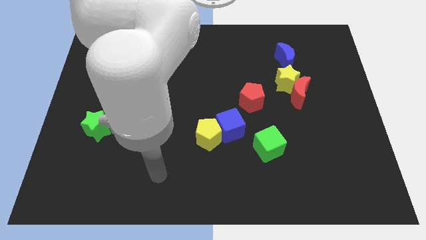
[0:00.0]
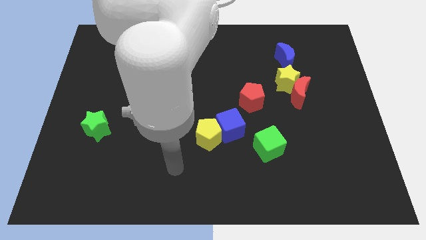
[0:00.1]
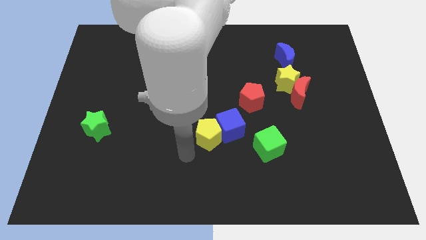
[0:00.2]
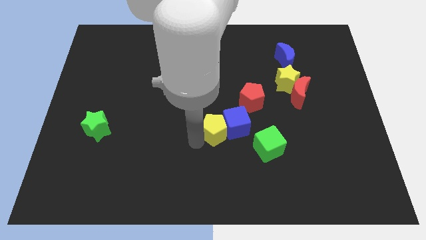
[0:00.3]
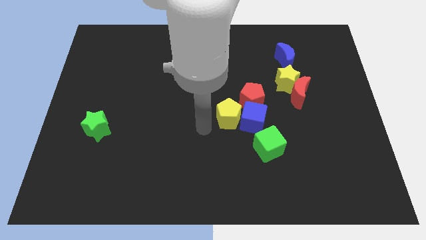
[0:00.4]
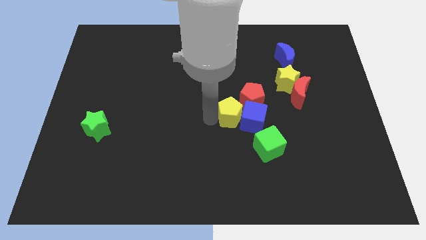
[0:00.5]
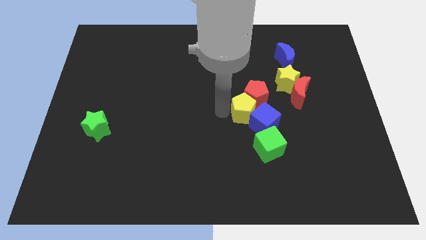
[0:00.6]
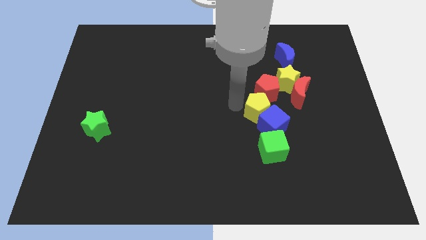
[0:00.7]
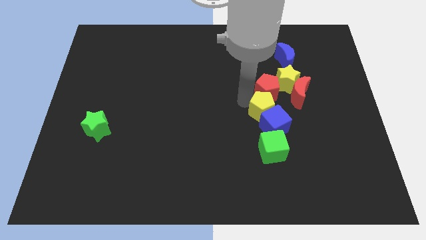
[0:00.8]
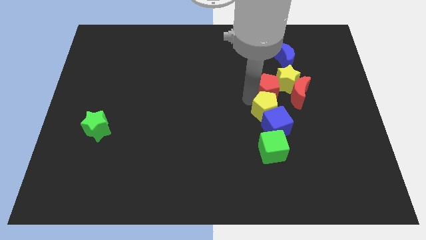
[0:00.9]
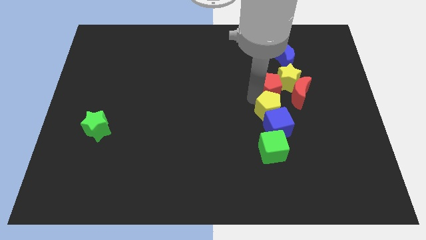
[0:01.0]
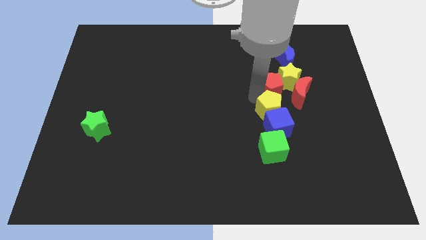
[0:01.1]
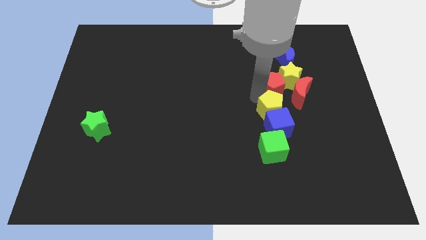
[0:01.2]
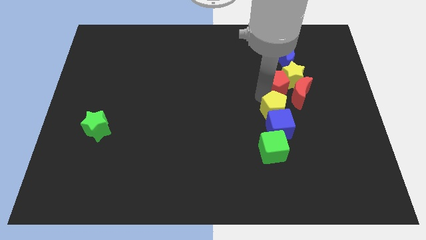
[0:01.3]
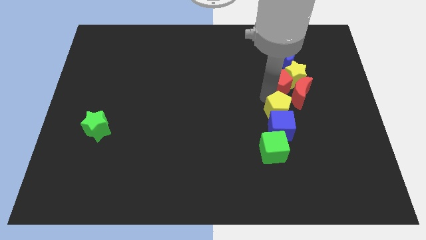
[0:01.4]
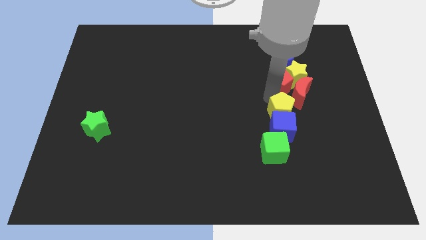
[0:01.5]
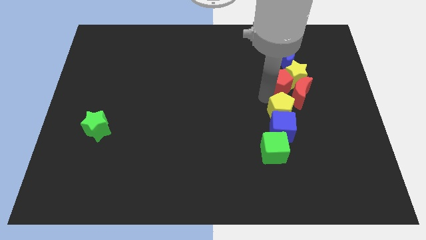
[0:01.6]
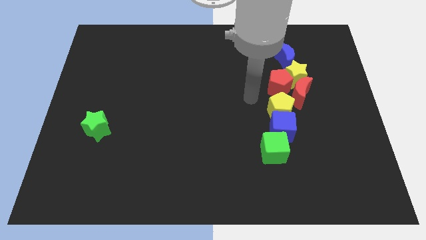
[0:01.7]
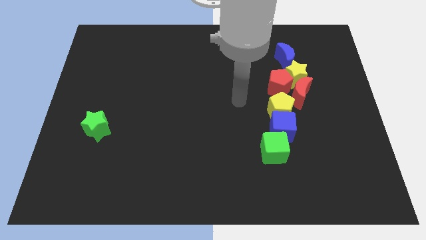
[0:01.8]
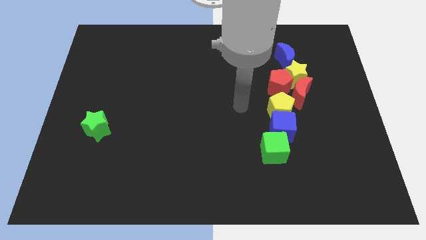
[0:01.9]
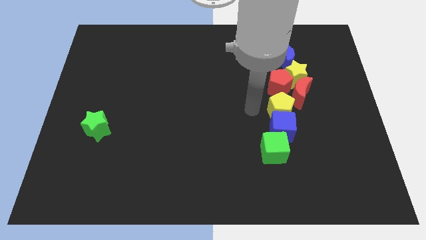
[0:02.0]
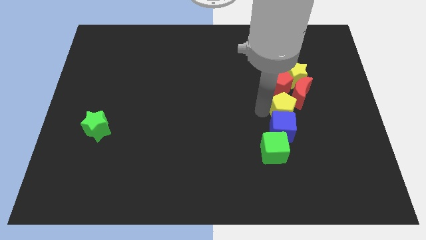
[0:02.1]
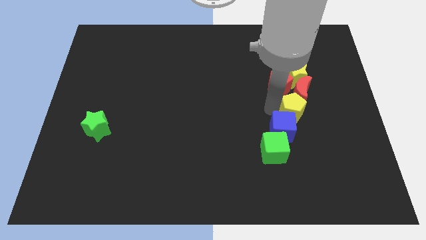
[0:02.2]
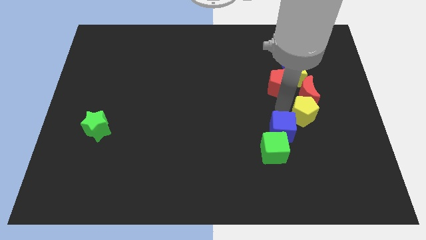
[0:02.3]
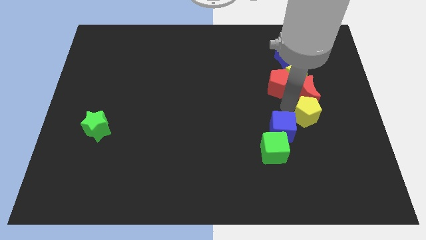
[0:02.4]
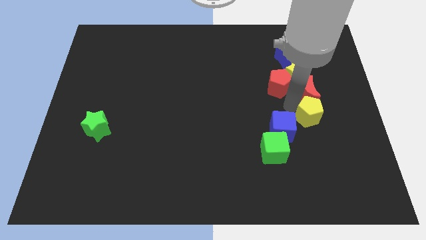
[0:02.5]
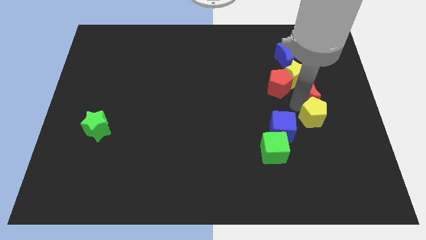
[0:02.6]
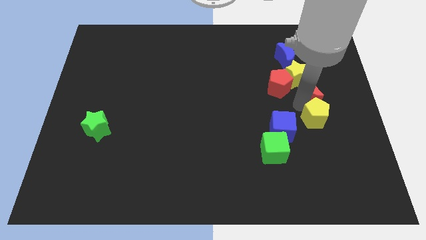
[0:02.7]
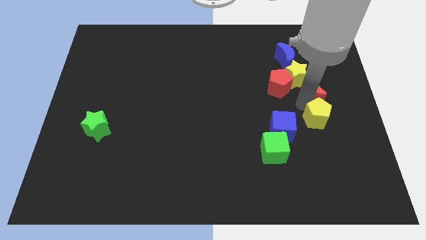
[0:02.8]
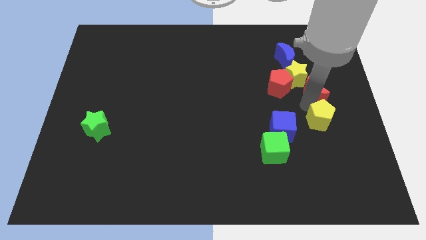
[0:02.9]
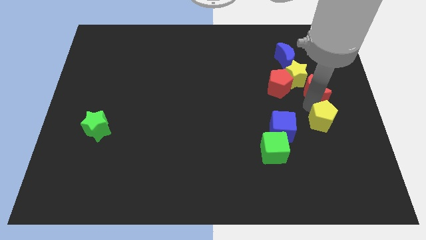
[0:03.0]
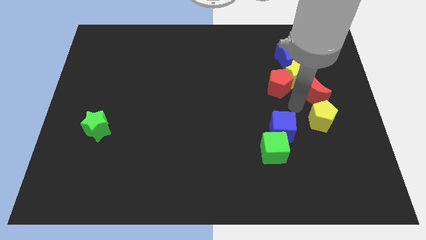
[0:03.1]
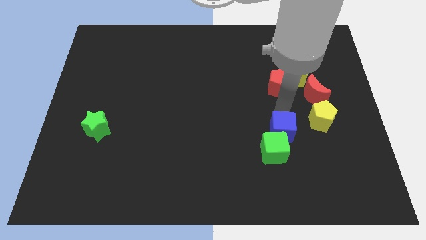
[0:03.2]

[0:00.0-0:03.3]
place the yellow pentagon below the red moon

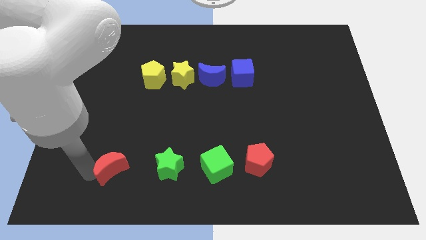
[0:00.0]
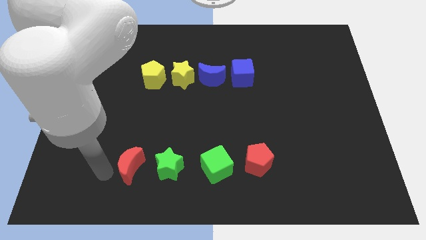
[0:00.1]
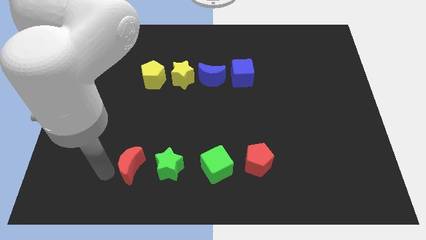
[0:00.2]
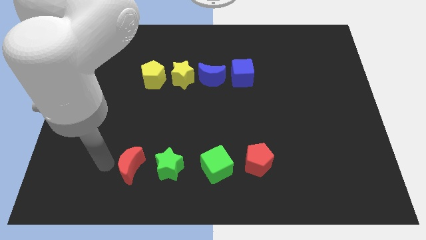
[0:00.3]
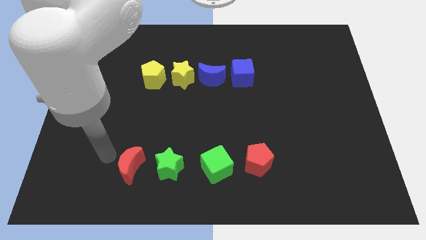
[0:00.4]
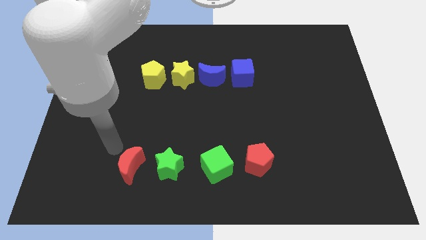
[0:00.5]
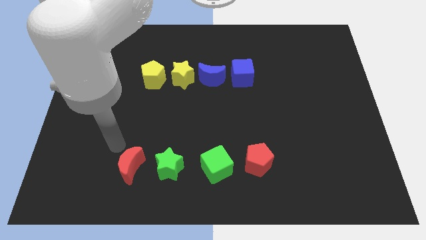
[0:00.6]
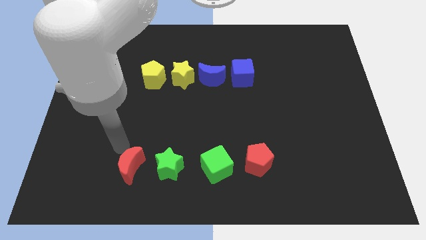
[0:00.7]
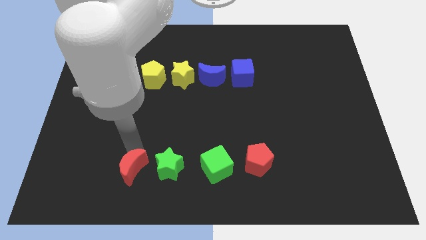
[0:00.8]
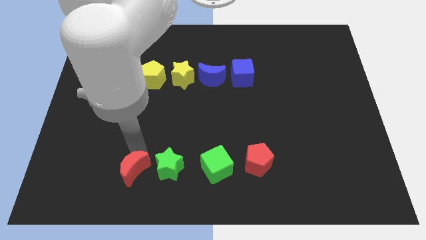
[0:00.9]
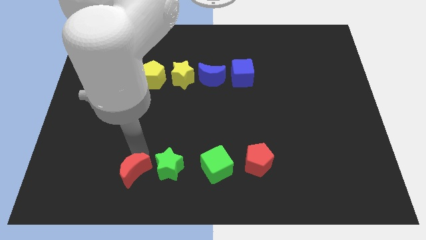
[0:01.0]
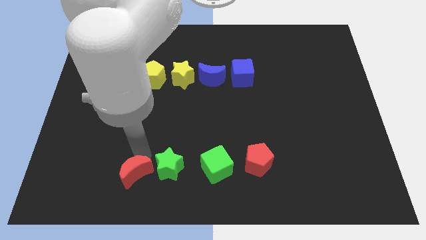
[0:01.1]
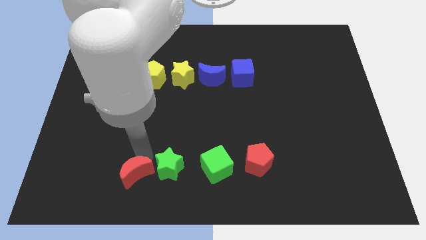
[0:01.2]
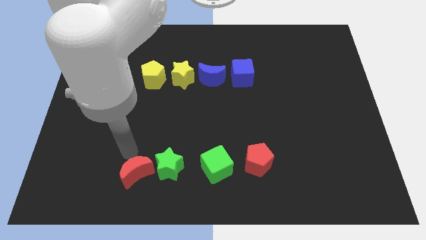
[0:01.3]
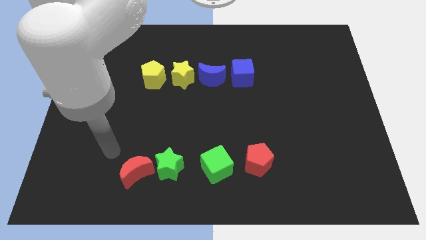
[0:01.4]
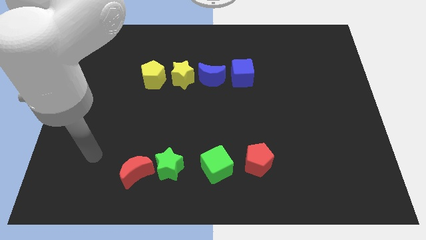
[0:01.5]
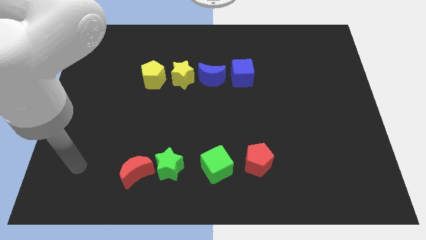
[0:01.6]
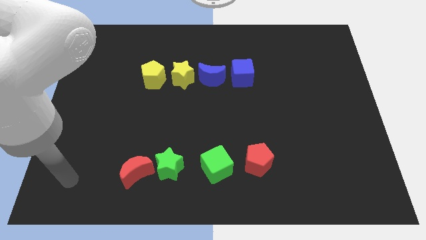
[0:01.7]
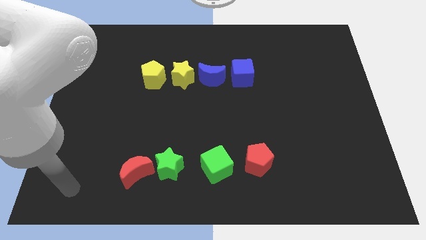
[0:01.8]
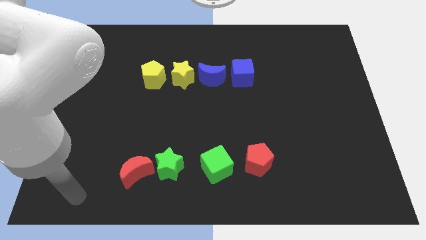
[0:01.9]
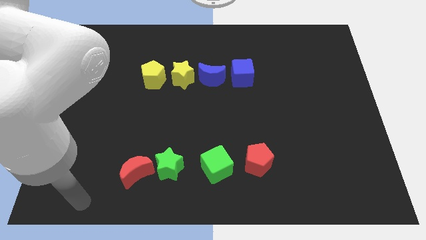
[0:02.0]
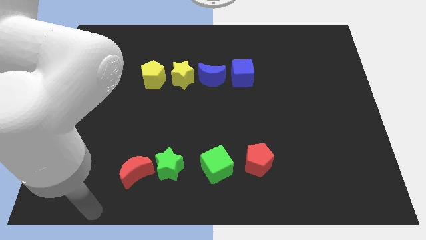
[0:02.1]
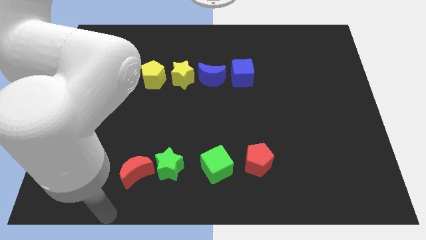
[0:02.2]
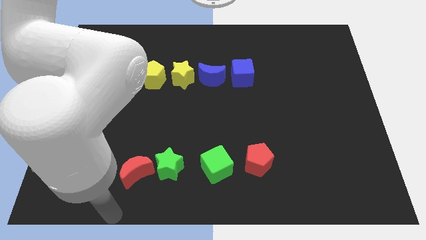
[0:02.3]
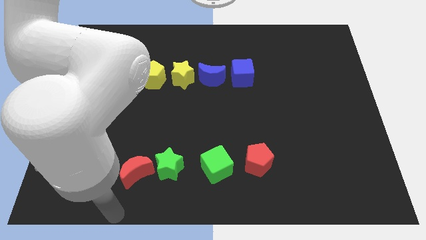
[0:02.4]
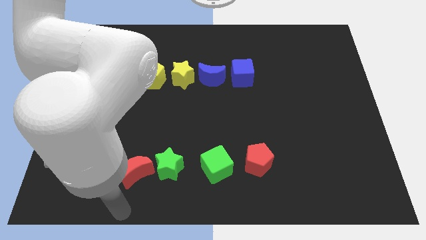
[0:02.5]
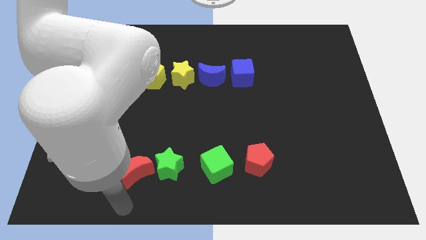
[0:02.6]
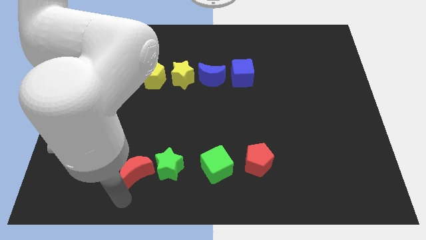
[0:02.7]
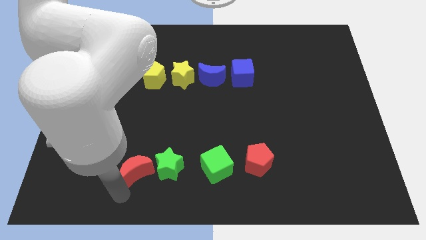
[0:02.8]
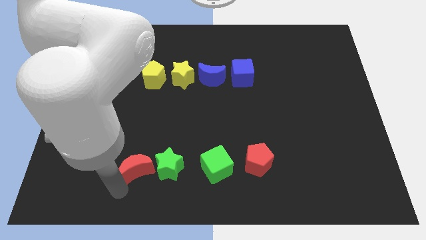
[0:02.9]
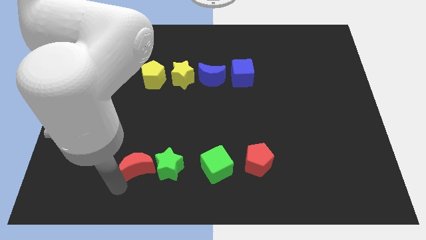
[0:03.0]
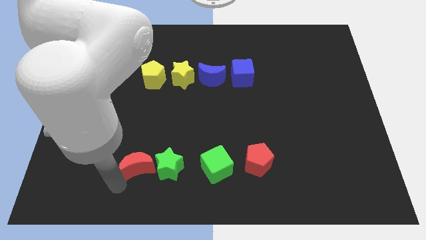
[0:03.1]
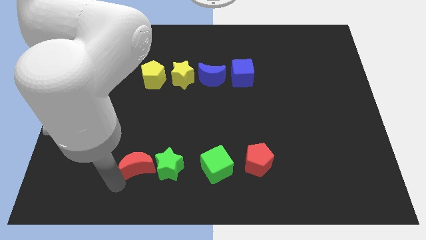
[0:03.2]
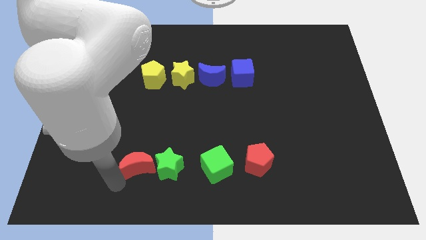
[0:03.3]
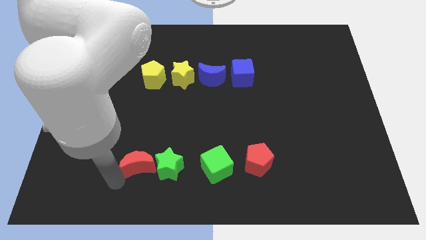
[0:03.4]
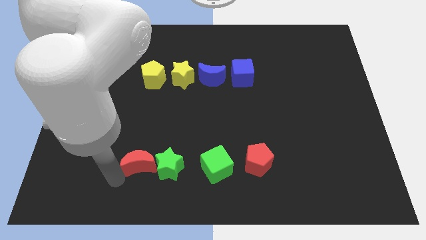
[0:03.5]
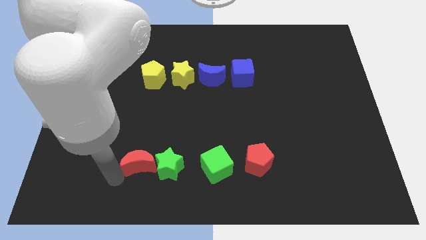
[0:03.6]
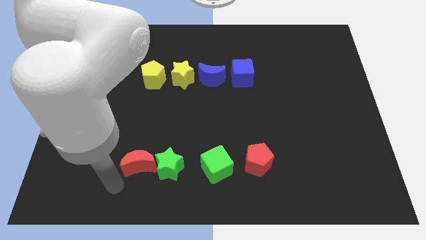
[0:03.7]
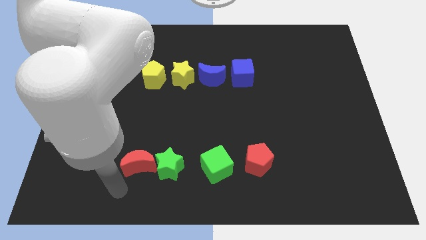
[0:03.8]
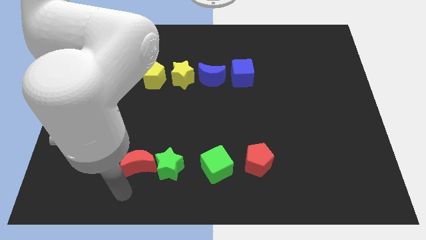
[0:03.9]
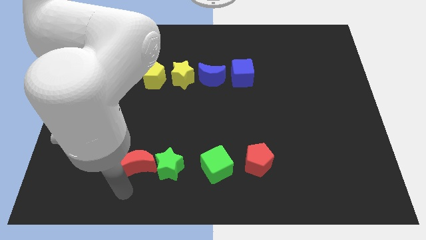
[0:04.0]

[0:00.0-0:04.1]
place red moon to the left of green star

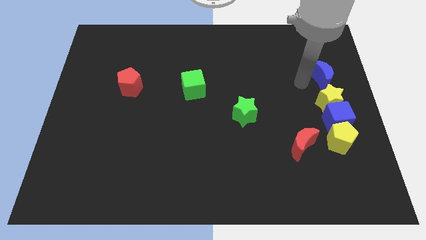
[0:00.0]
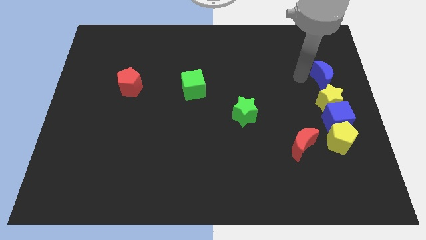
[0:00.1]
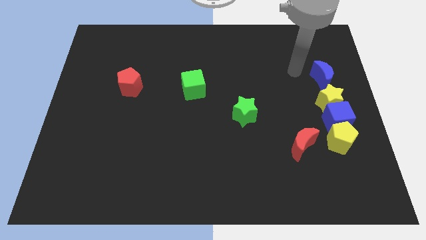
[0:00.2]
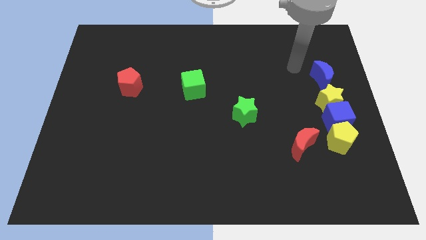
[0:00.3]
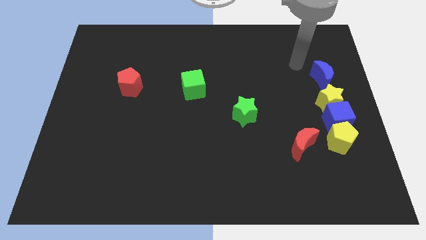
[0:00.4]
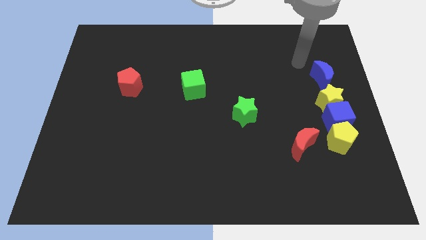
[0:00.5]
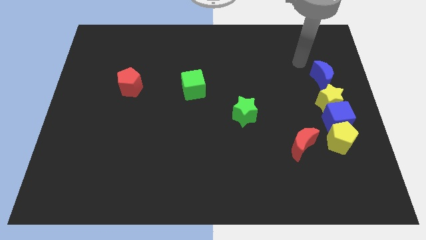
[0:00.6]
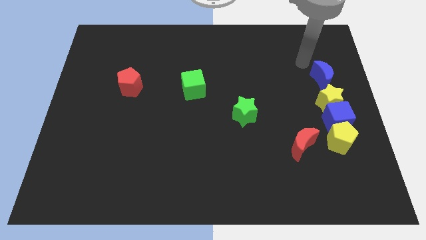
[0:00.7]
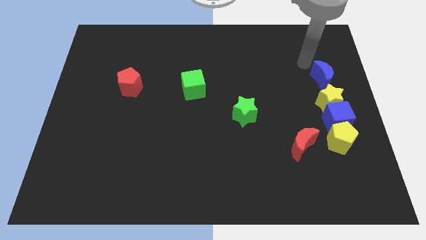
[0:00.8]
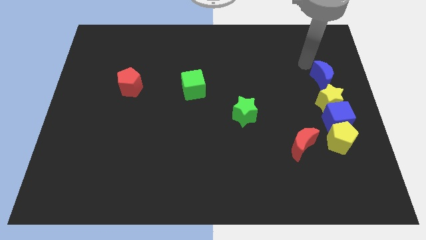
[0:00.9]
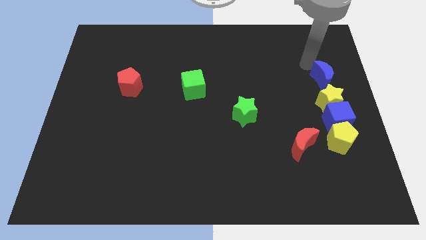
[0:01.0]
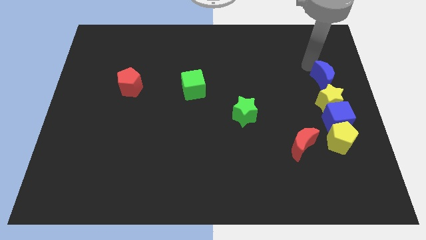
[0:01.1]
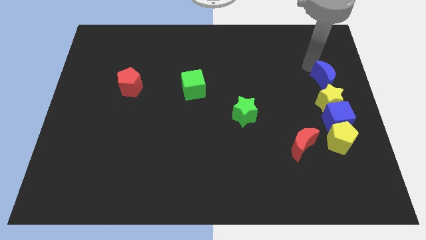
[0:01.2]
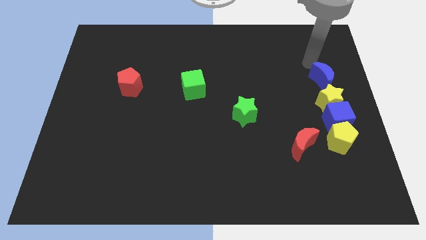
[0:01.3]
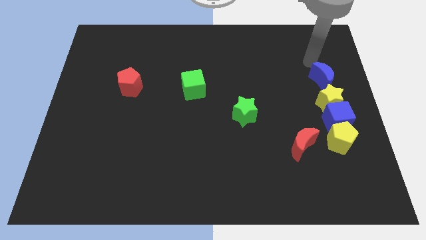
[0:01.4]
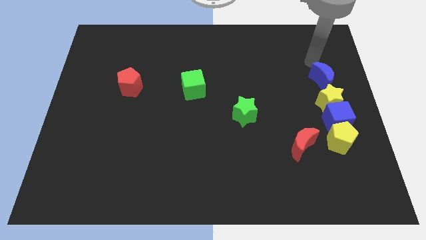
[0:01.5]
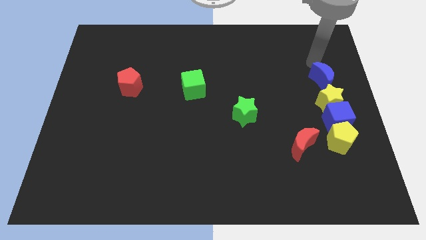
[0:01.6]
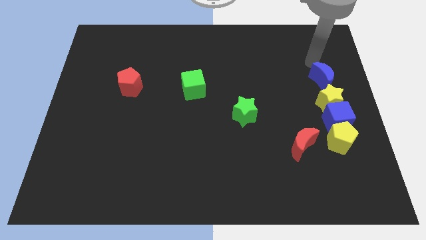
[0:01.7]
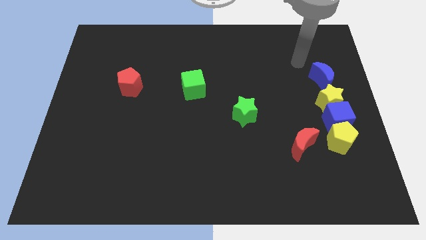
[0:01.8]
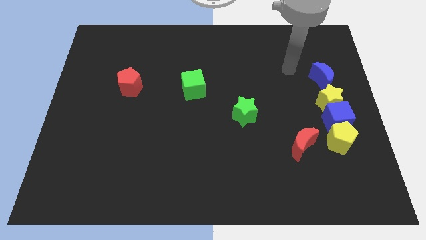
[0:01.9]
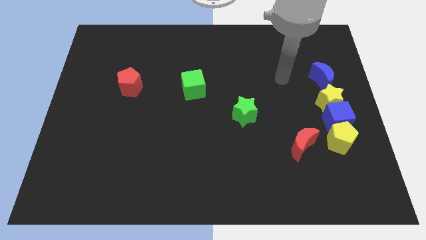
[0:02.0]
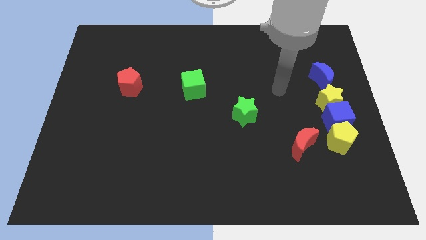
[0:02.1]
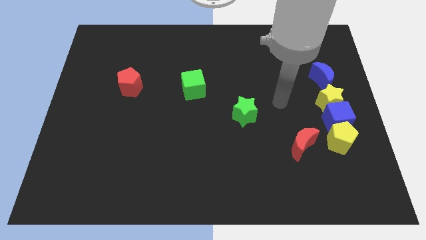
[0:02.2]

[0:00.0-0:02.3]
slightly tap the blue crescent on top
